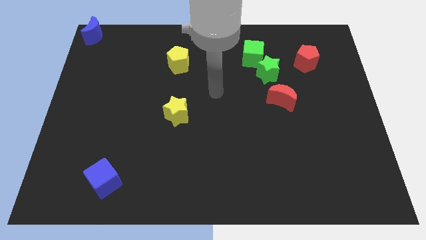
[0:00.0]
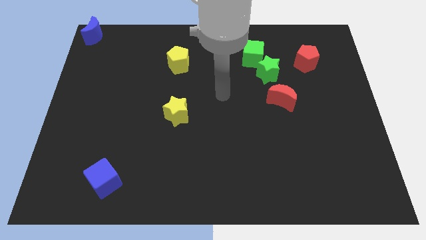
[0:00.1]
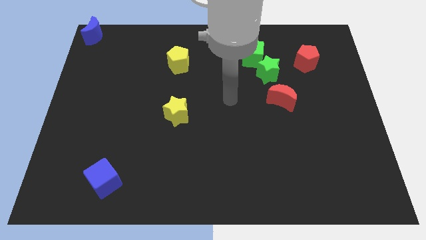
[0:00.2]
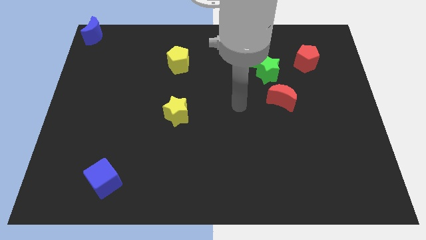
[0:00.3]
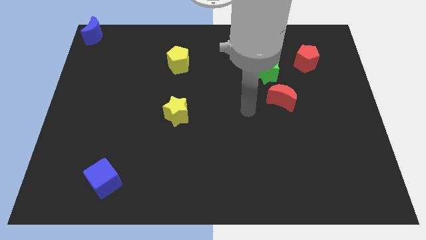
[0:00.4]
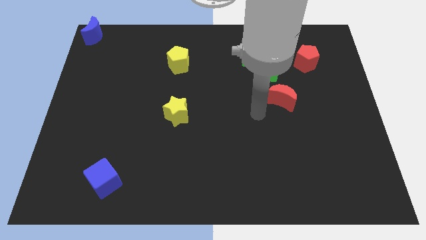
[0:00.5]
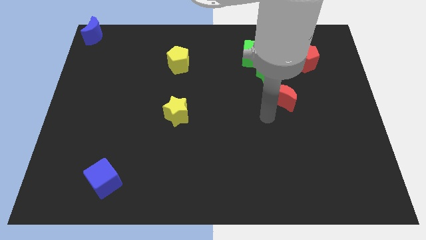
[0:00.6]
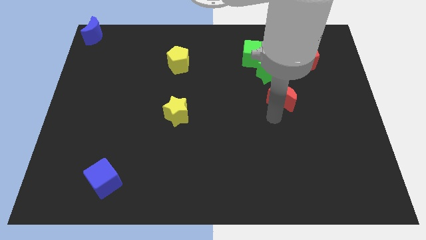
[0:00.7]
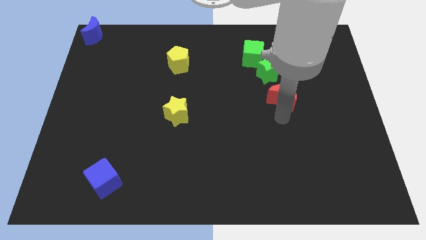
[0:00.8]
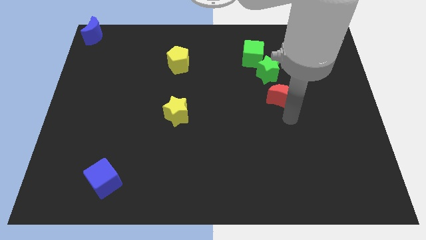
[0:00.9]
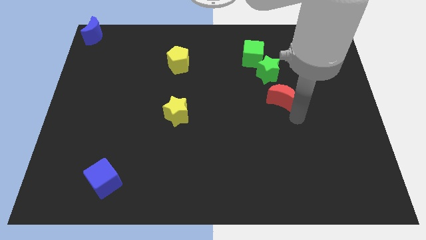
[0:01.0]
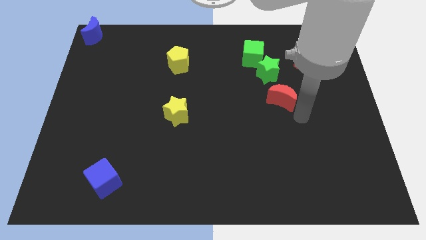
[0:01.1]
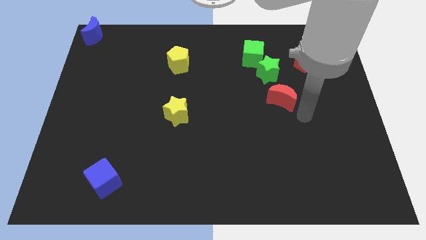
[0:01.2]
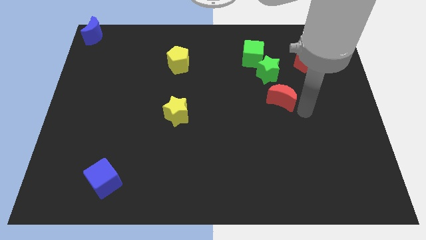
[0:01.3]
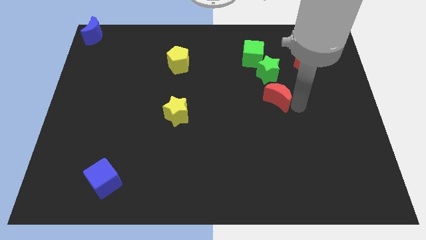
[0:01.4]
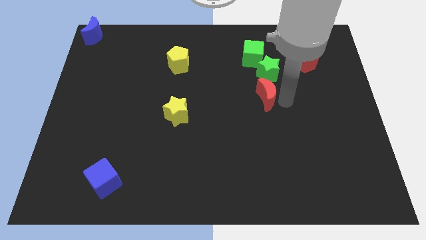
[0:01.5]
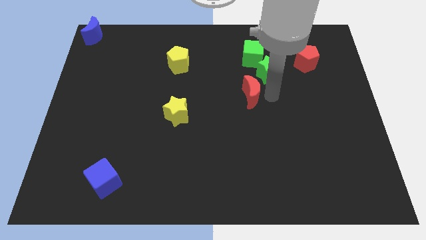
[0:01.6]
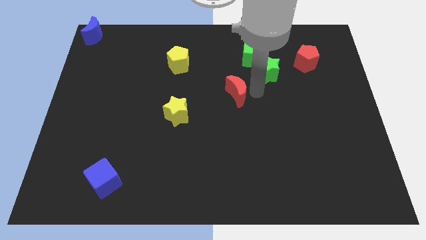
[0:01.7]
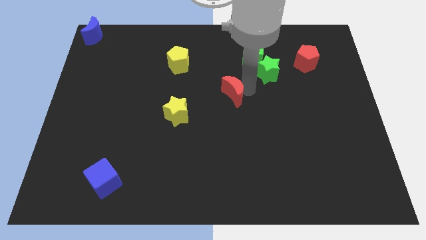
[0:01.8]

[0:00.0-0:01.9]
drag the red crescent diagonally on the top right side of the yellow star

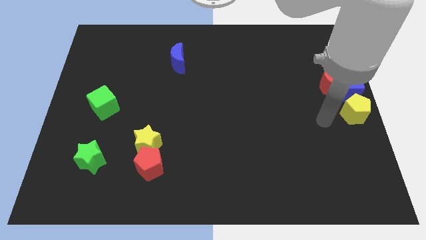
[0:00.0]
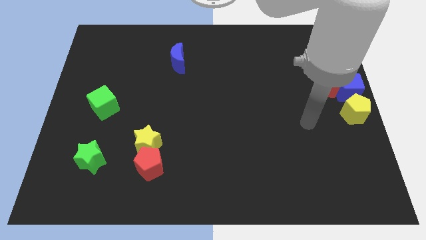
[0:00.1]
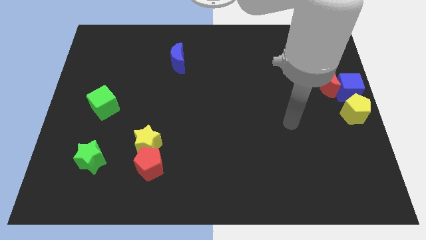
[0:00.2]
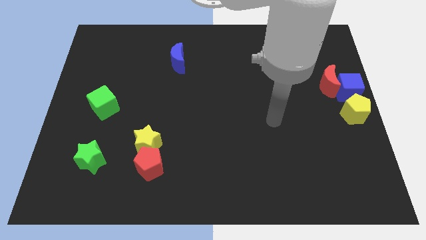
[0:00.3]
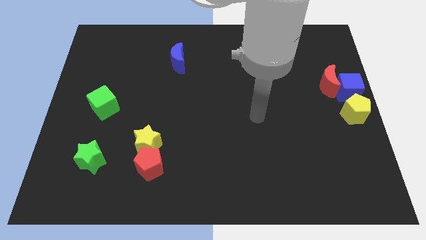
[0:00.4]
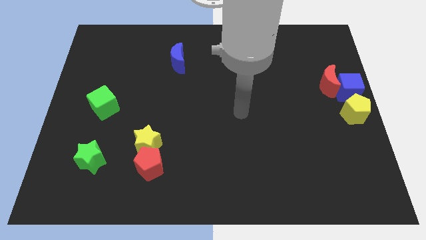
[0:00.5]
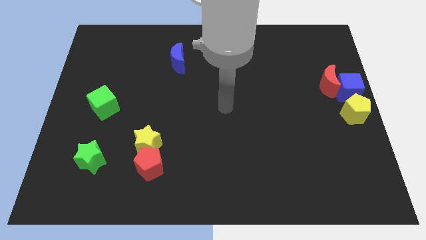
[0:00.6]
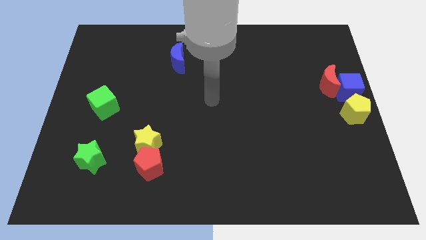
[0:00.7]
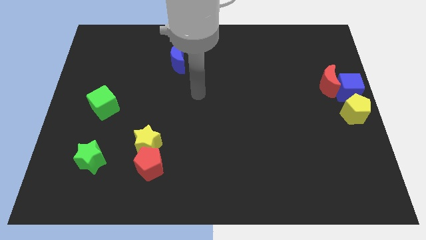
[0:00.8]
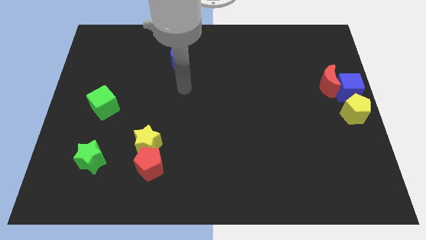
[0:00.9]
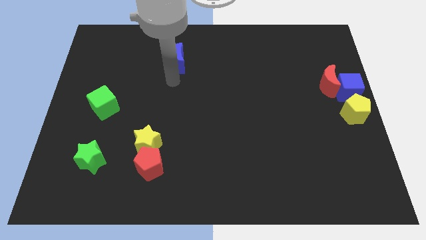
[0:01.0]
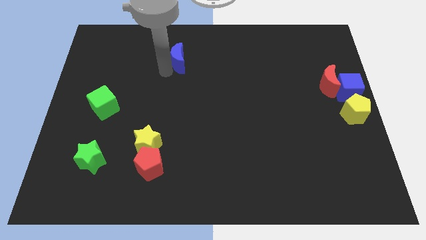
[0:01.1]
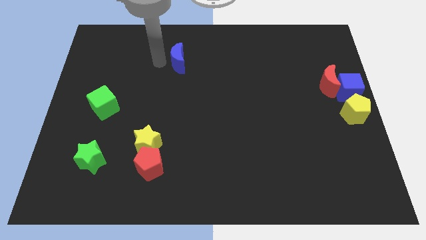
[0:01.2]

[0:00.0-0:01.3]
move arm near blue moon

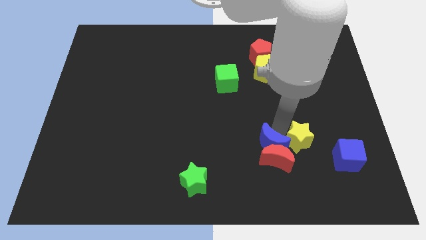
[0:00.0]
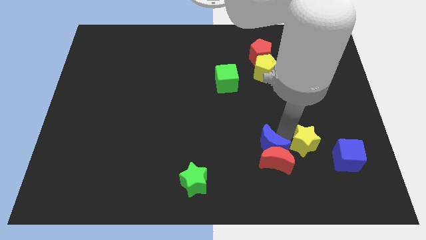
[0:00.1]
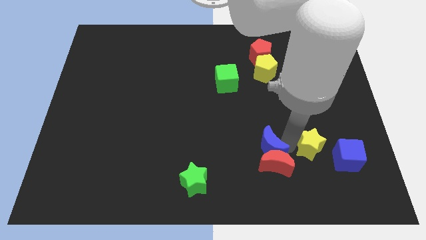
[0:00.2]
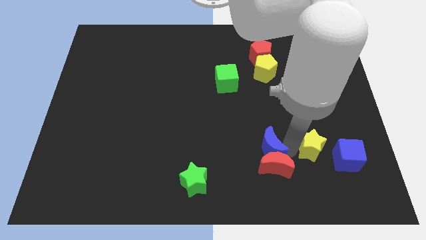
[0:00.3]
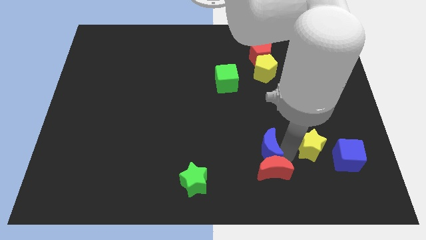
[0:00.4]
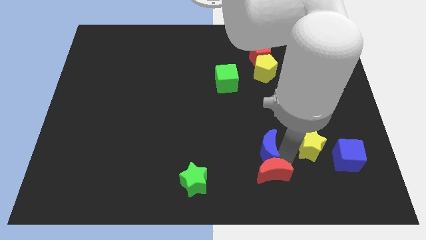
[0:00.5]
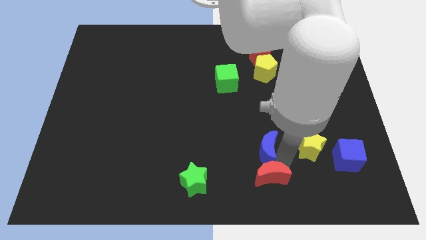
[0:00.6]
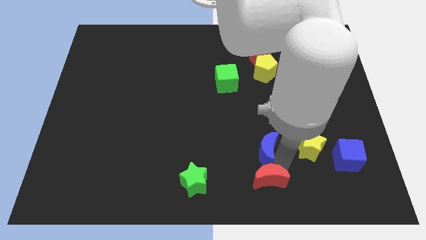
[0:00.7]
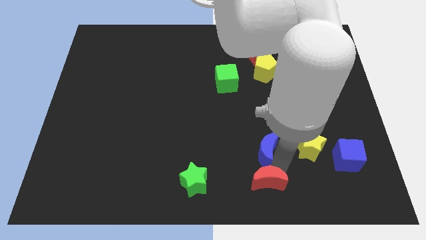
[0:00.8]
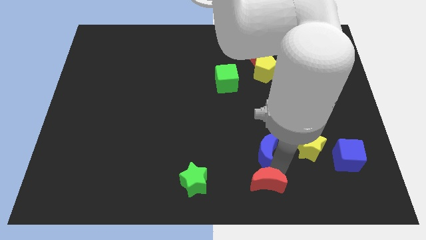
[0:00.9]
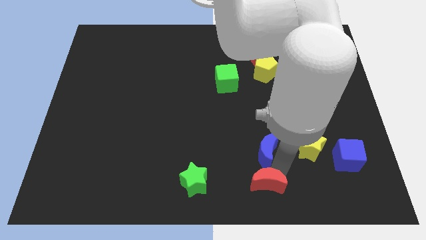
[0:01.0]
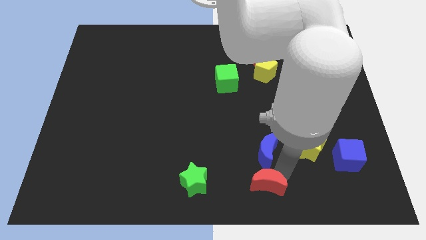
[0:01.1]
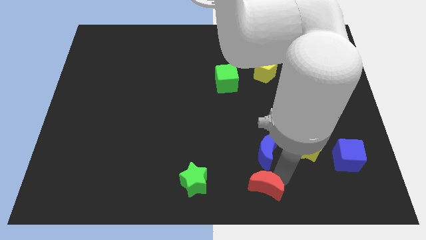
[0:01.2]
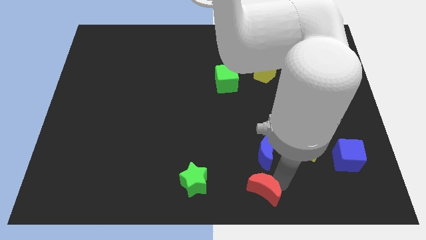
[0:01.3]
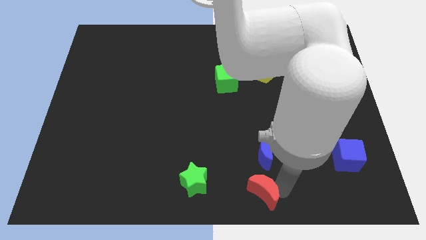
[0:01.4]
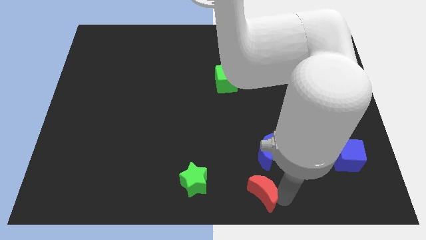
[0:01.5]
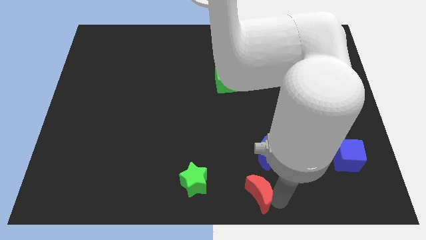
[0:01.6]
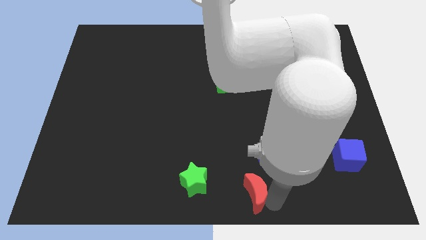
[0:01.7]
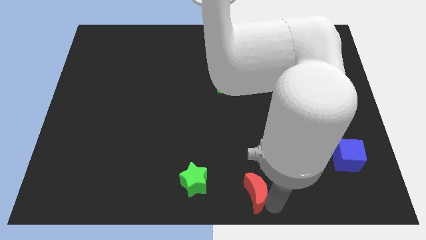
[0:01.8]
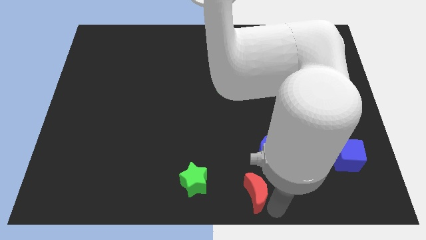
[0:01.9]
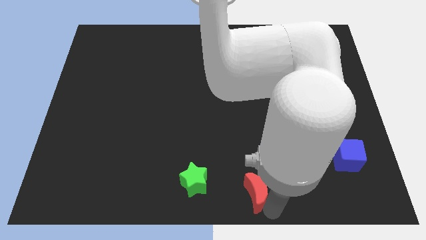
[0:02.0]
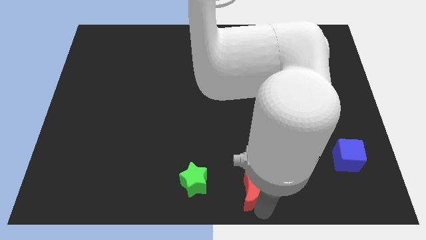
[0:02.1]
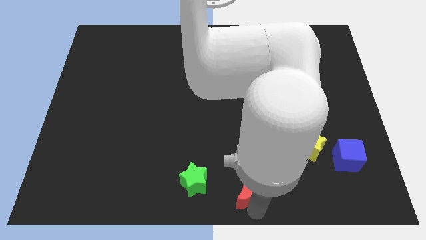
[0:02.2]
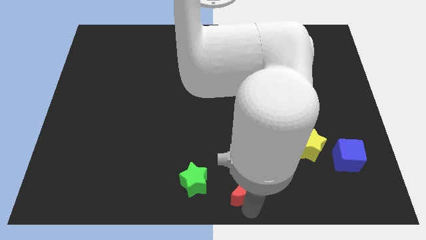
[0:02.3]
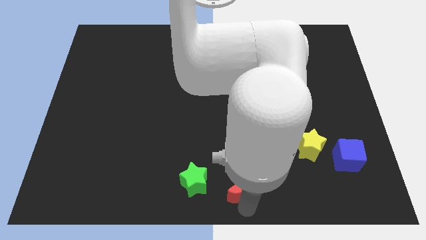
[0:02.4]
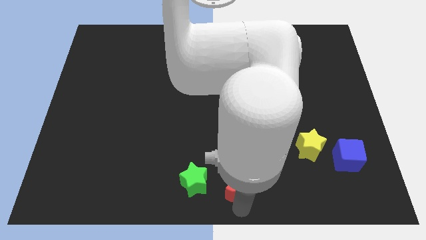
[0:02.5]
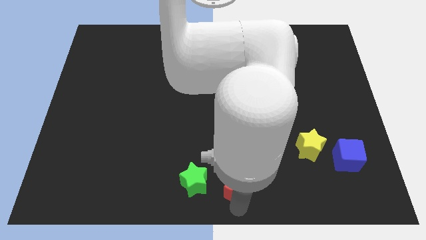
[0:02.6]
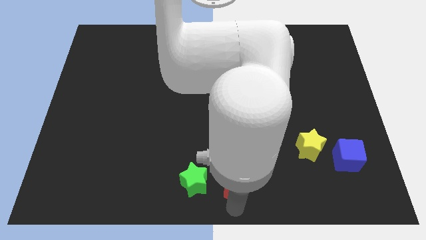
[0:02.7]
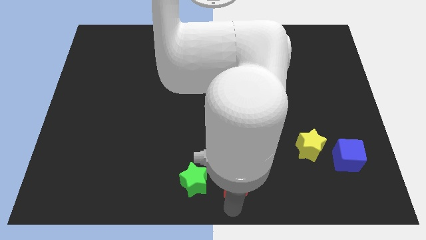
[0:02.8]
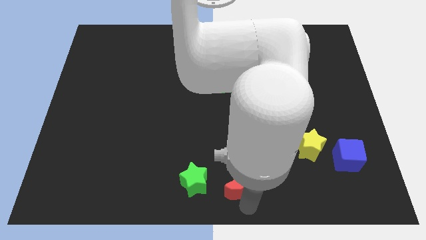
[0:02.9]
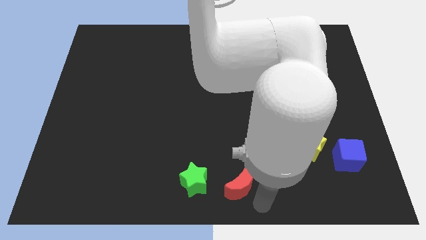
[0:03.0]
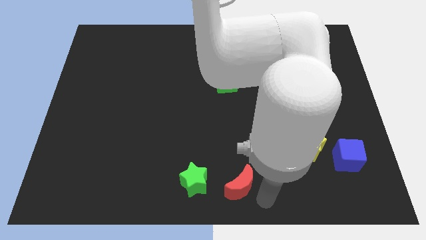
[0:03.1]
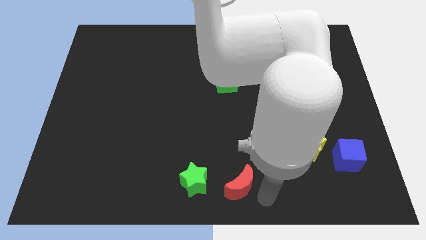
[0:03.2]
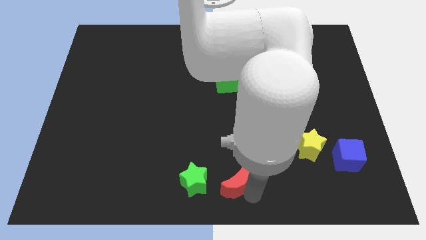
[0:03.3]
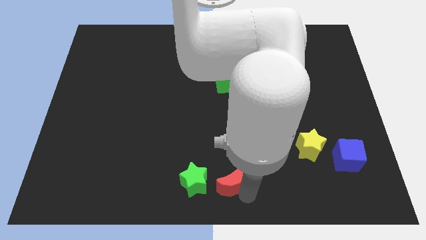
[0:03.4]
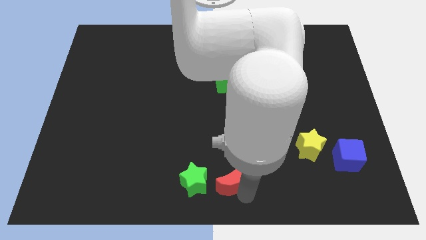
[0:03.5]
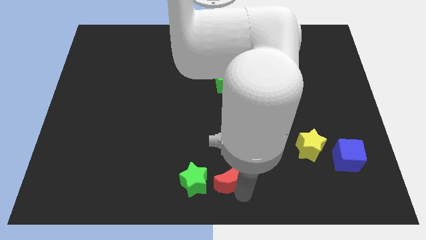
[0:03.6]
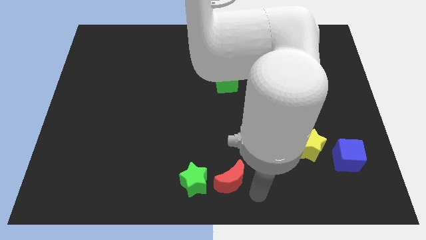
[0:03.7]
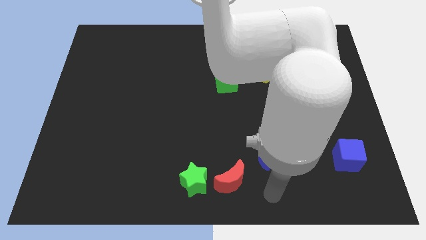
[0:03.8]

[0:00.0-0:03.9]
move the red moon right beside the green statr

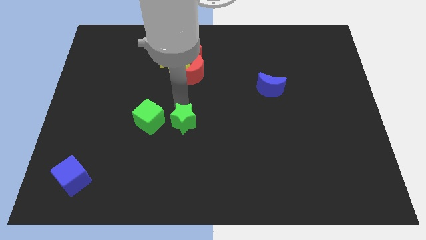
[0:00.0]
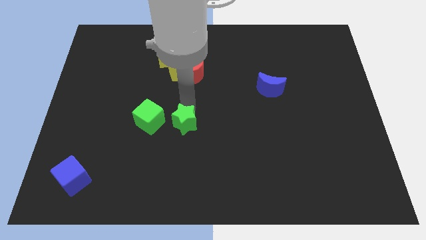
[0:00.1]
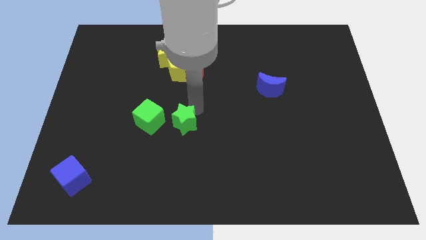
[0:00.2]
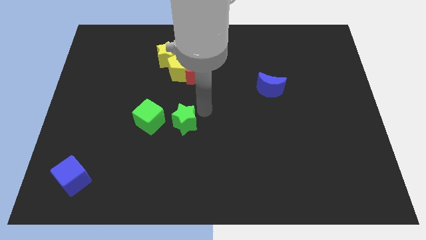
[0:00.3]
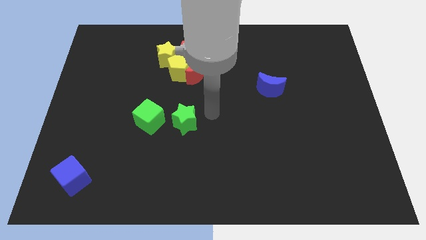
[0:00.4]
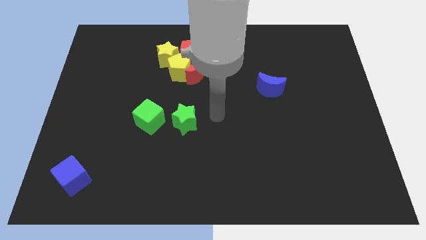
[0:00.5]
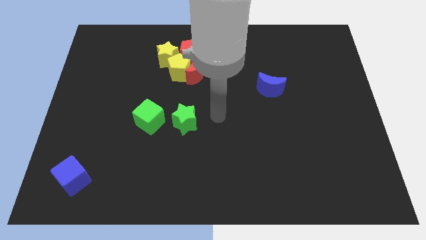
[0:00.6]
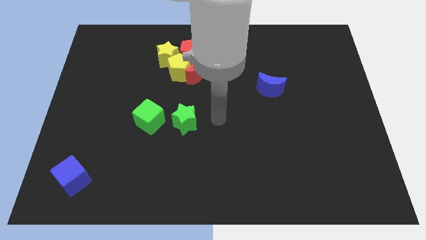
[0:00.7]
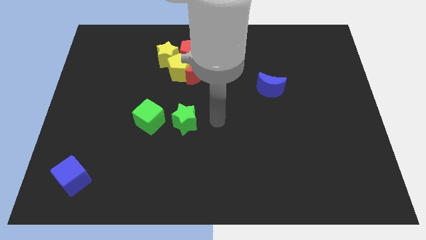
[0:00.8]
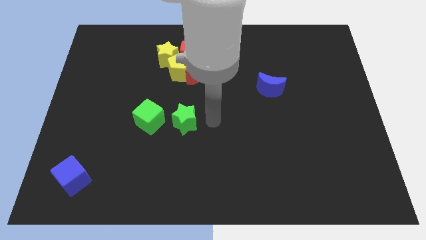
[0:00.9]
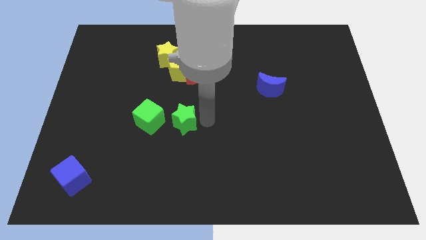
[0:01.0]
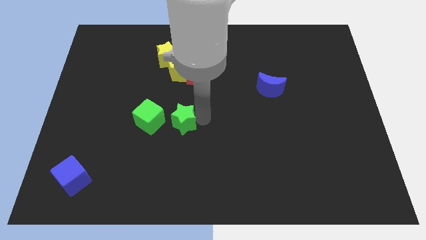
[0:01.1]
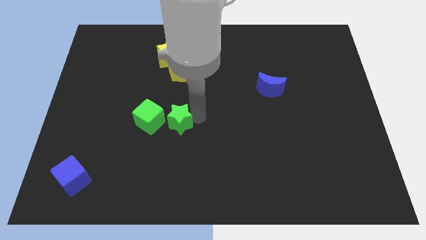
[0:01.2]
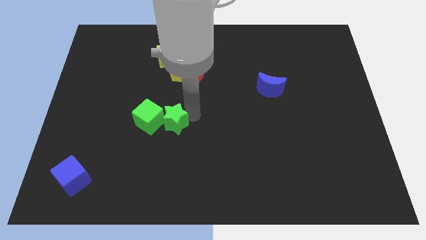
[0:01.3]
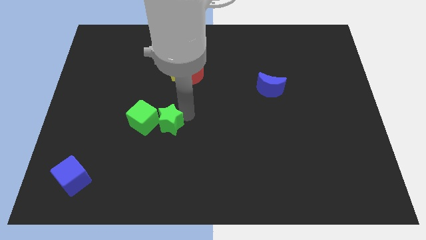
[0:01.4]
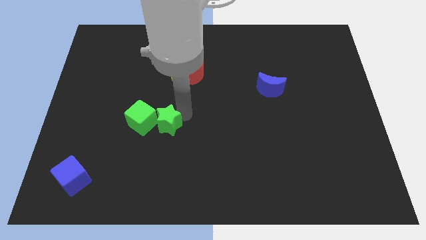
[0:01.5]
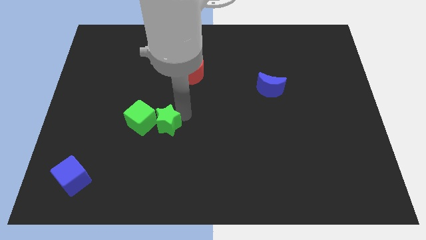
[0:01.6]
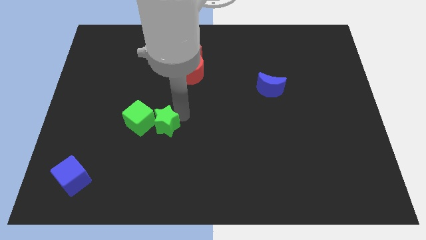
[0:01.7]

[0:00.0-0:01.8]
push the green star into the green cube
